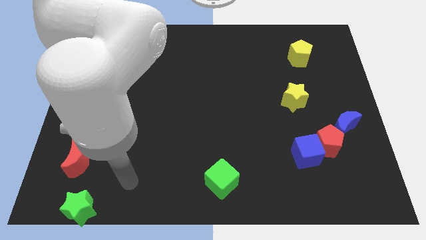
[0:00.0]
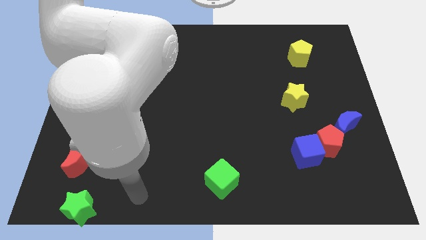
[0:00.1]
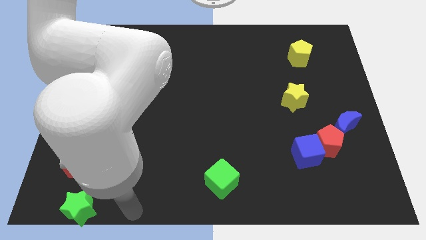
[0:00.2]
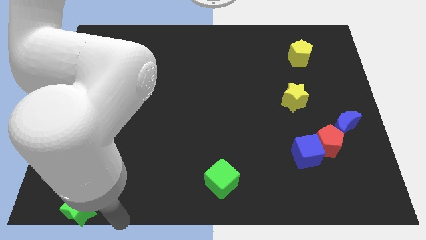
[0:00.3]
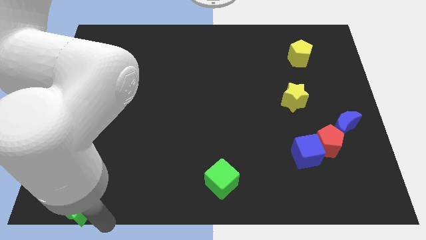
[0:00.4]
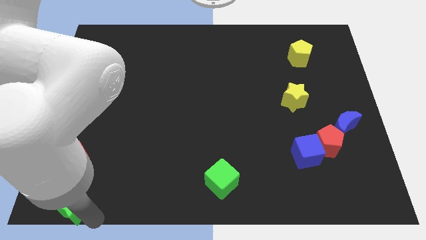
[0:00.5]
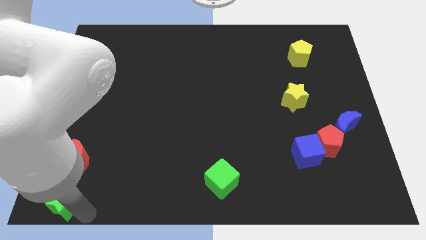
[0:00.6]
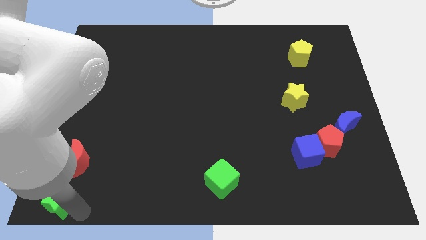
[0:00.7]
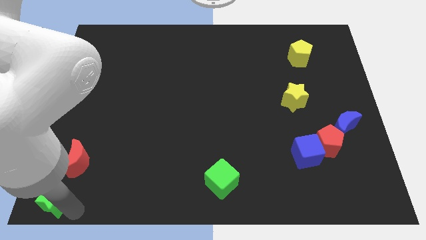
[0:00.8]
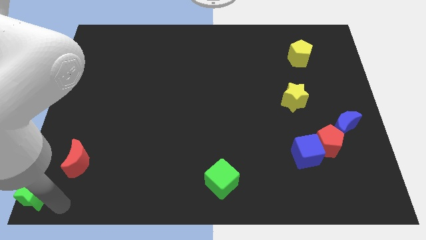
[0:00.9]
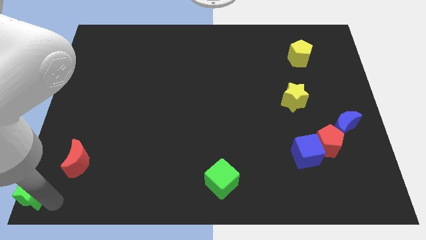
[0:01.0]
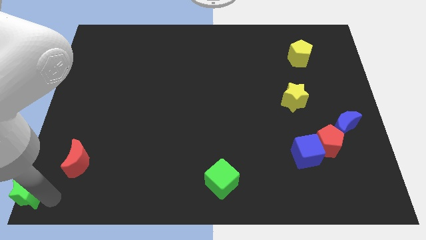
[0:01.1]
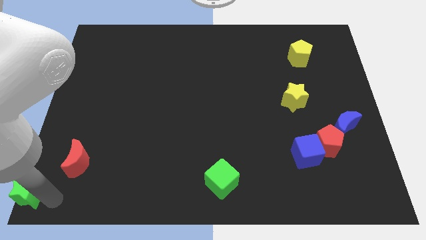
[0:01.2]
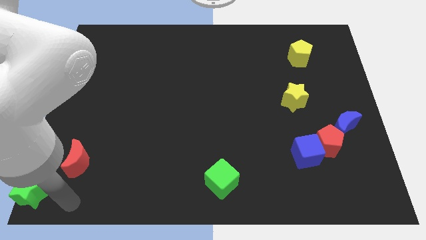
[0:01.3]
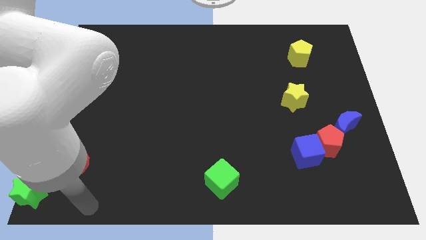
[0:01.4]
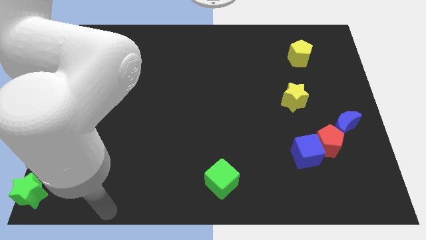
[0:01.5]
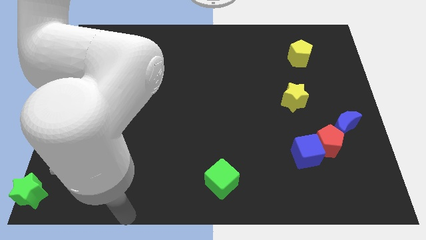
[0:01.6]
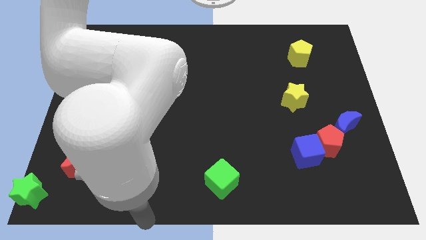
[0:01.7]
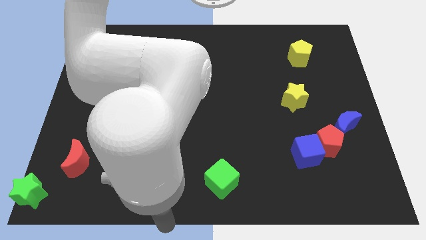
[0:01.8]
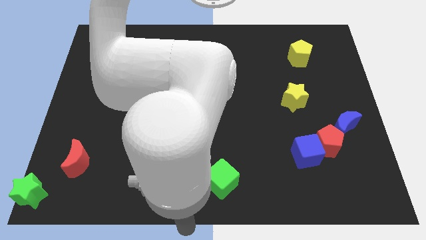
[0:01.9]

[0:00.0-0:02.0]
push the green star to the bottom left corner

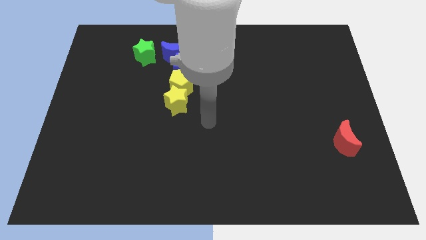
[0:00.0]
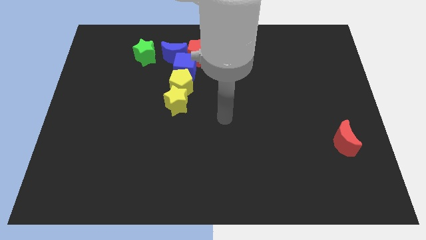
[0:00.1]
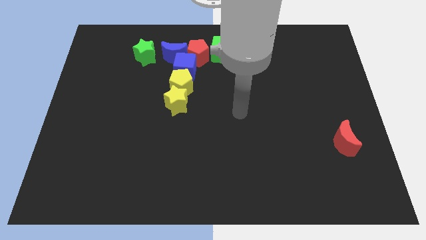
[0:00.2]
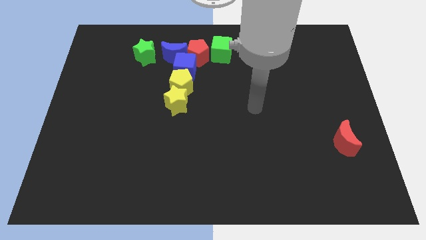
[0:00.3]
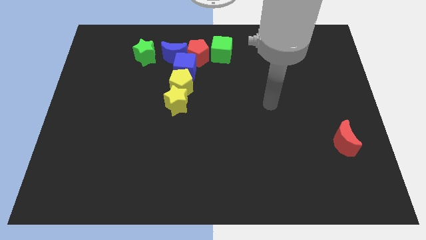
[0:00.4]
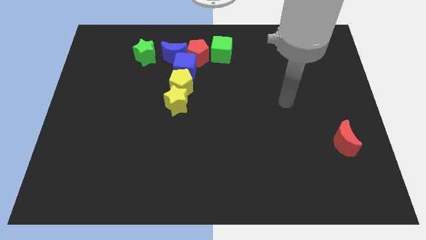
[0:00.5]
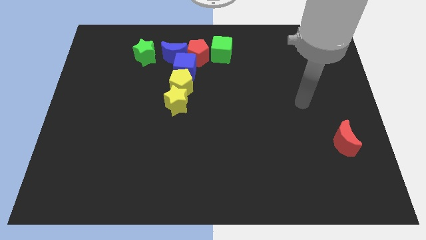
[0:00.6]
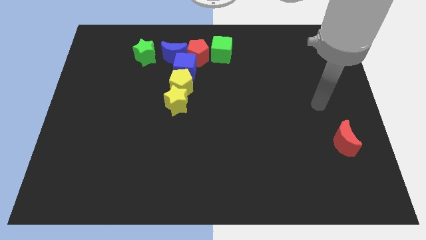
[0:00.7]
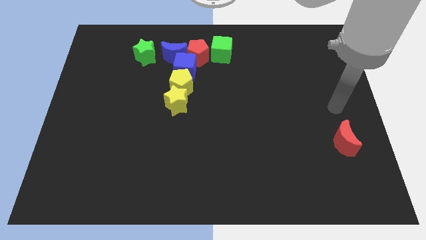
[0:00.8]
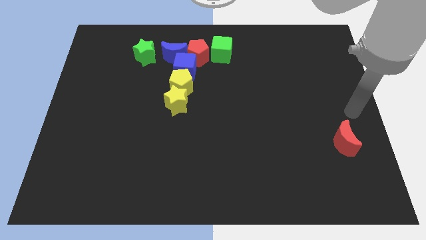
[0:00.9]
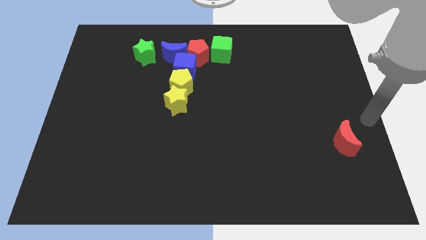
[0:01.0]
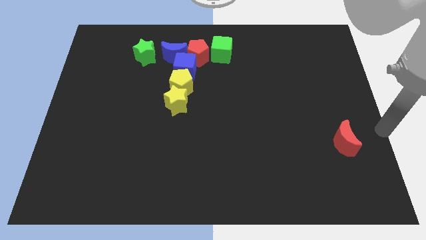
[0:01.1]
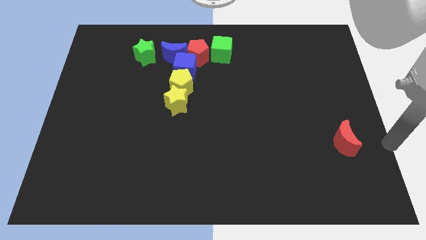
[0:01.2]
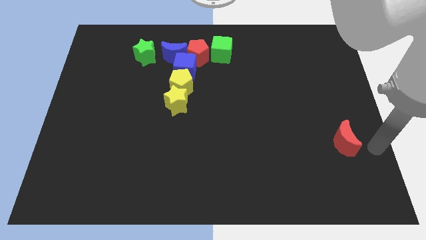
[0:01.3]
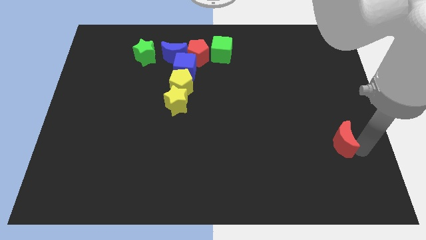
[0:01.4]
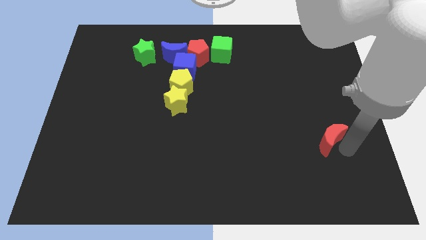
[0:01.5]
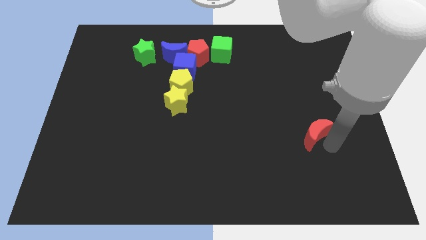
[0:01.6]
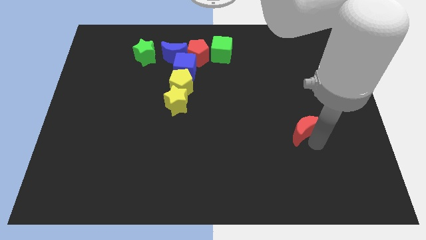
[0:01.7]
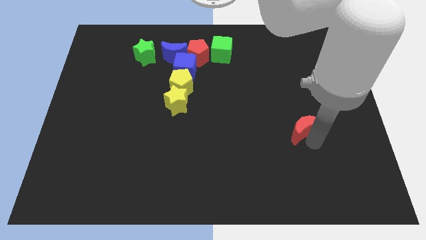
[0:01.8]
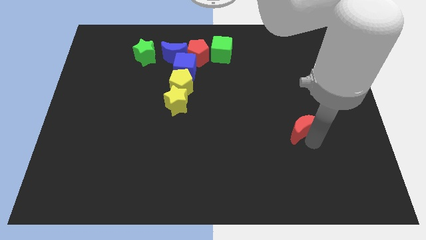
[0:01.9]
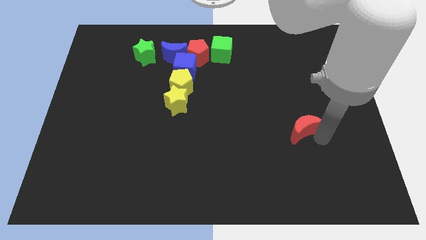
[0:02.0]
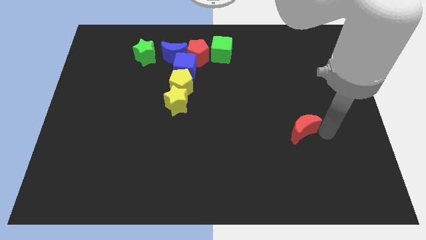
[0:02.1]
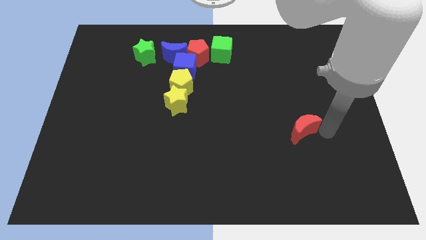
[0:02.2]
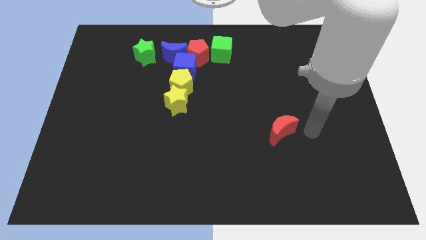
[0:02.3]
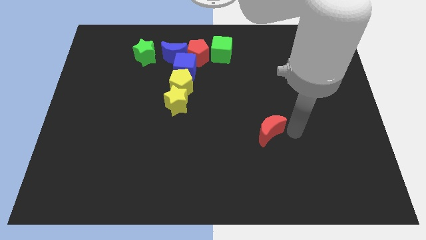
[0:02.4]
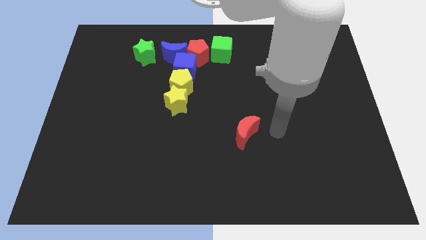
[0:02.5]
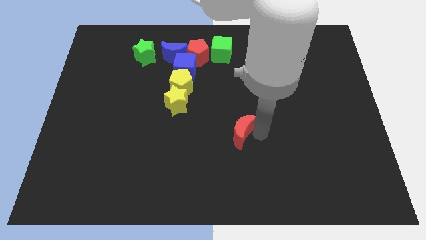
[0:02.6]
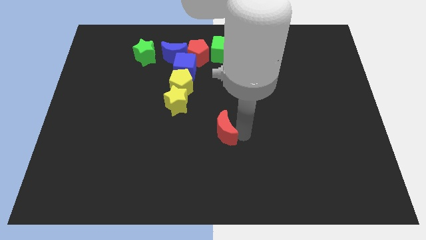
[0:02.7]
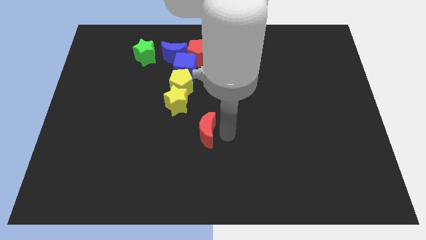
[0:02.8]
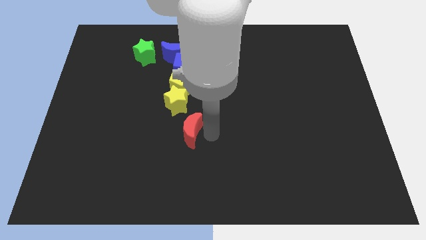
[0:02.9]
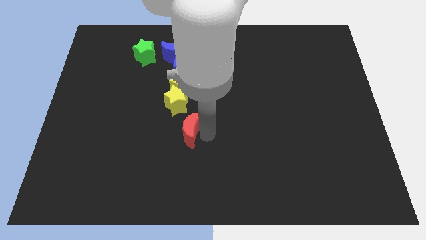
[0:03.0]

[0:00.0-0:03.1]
move the red crescent below to the yellow star

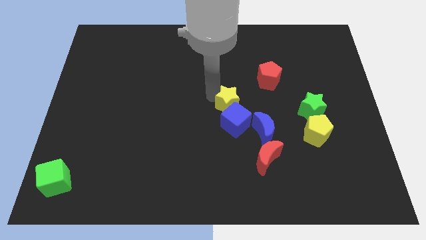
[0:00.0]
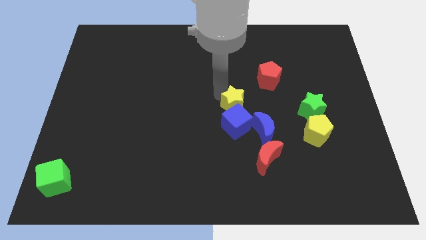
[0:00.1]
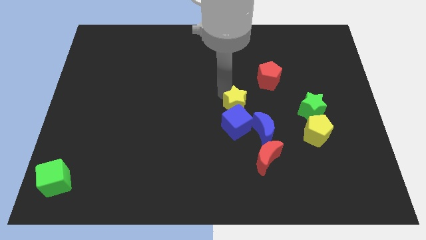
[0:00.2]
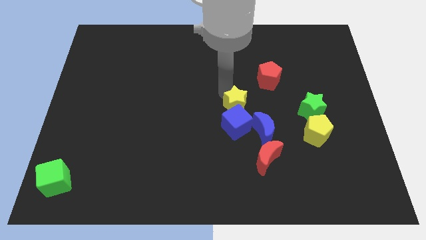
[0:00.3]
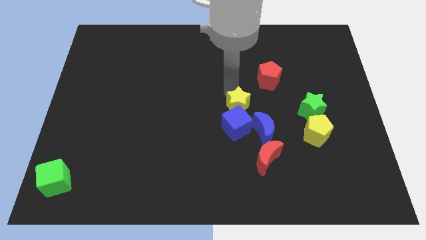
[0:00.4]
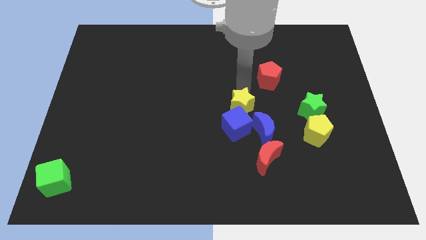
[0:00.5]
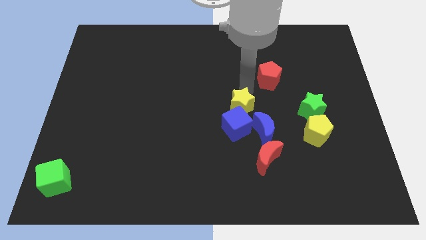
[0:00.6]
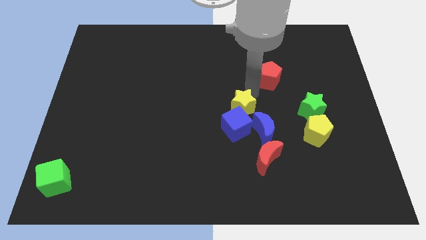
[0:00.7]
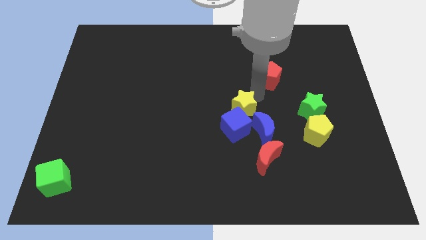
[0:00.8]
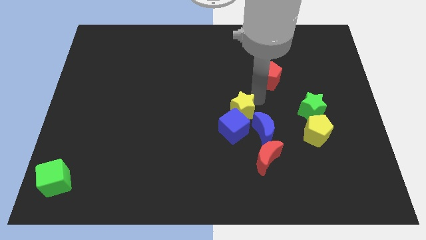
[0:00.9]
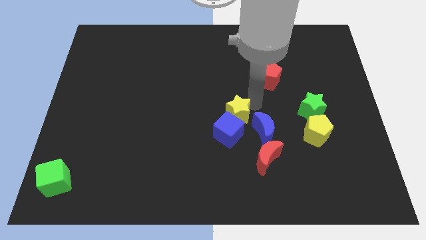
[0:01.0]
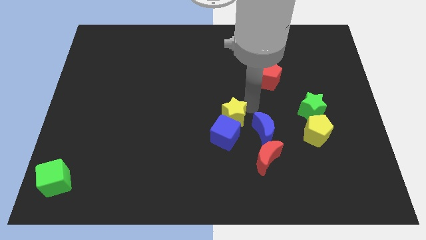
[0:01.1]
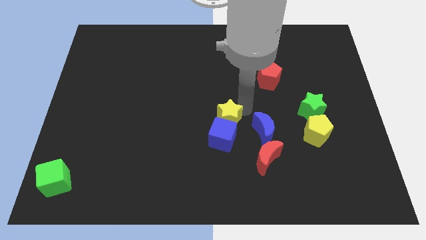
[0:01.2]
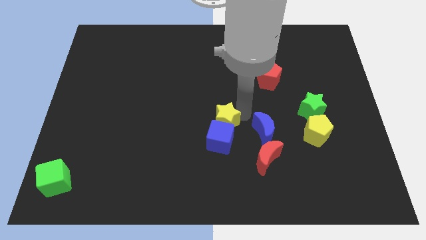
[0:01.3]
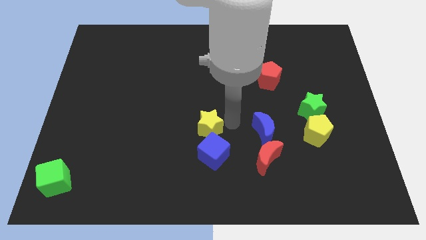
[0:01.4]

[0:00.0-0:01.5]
place yellow star to the left of blue moon

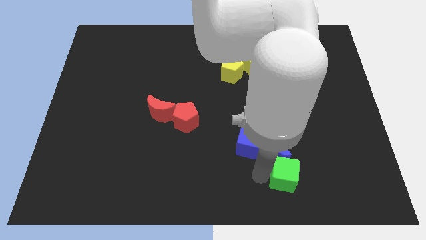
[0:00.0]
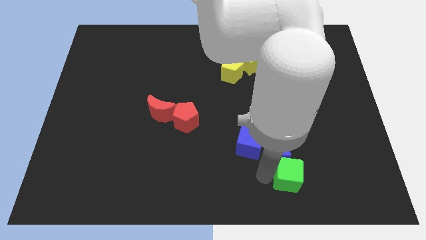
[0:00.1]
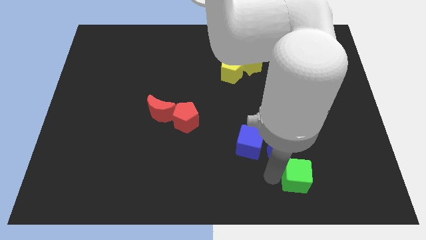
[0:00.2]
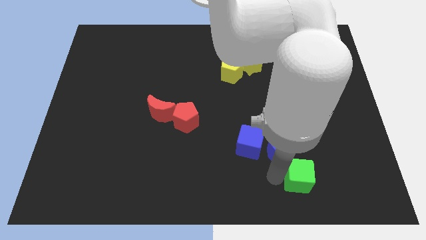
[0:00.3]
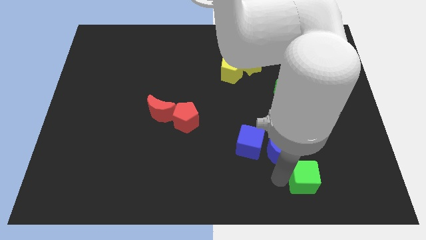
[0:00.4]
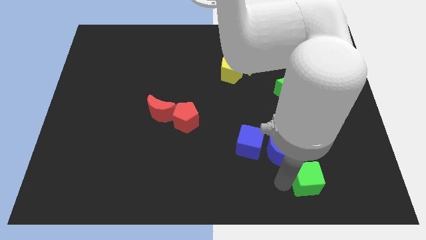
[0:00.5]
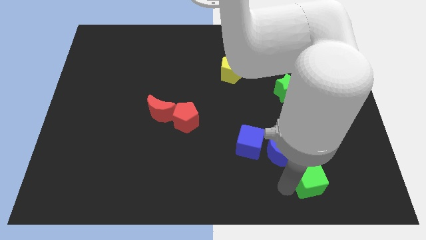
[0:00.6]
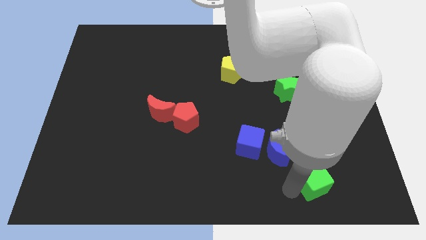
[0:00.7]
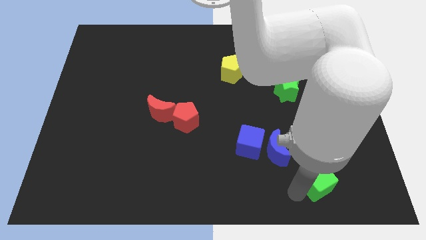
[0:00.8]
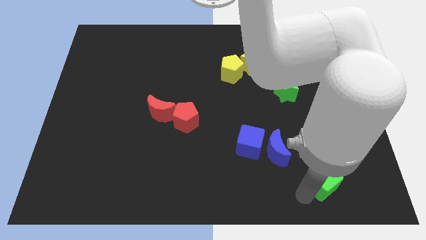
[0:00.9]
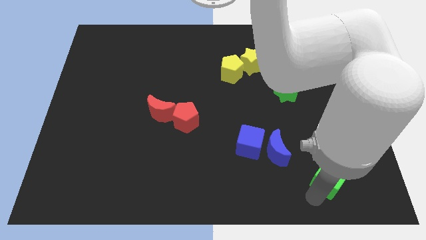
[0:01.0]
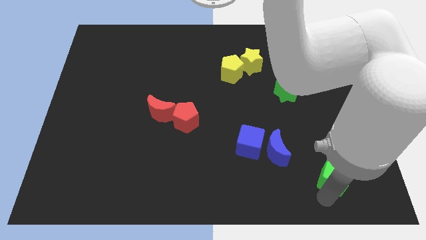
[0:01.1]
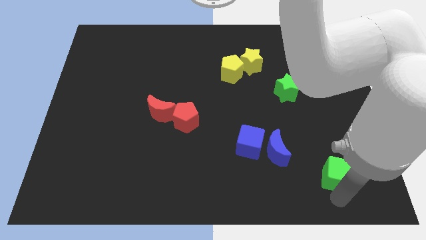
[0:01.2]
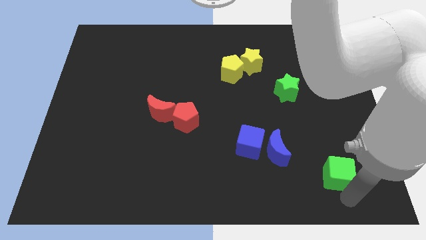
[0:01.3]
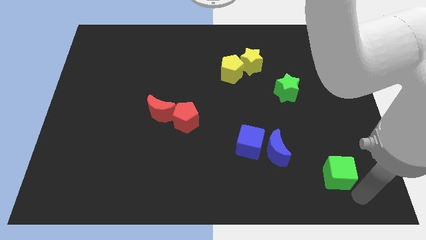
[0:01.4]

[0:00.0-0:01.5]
move the green cube towards the right of the board

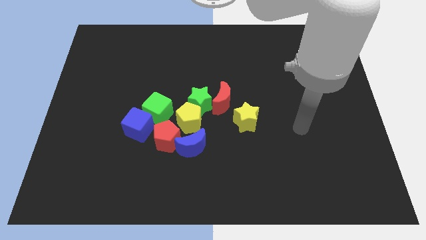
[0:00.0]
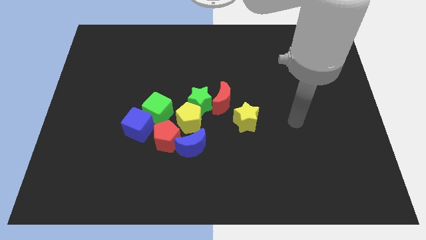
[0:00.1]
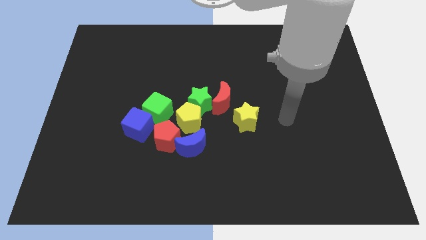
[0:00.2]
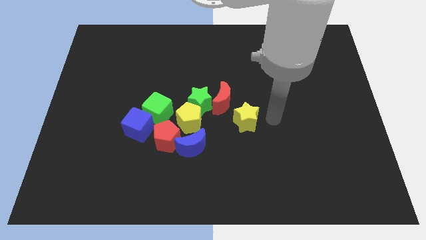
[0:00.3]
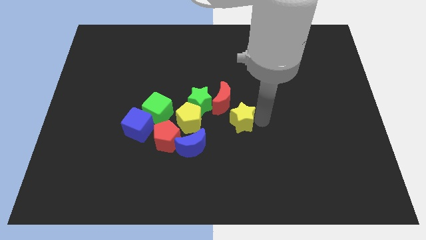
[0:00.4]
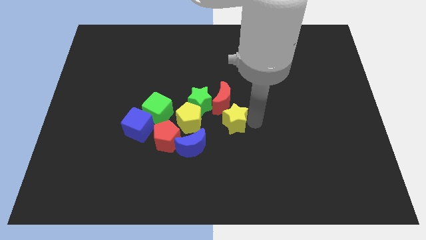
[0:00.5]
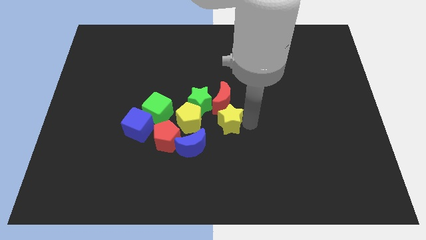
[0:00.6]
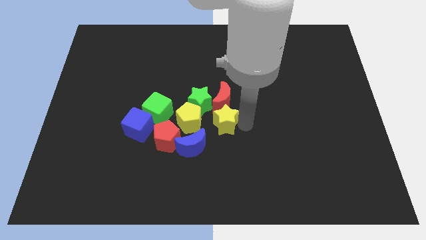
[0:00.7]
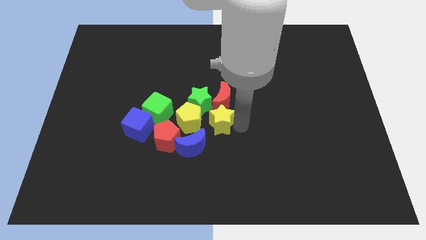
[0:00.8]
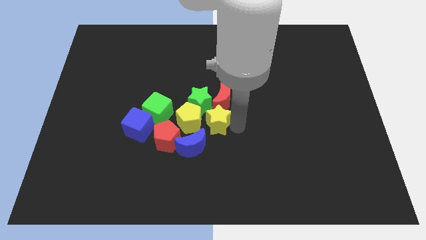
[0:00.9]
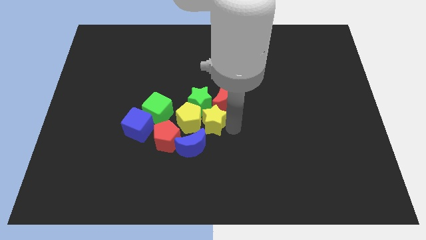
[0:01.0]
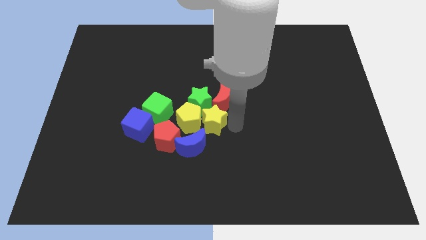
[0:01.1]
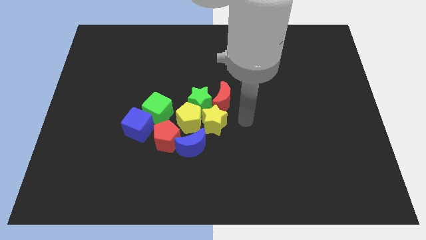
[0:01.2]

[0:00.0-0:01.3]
slide the yellow star close to the right side of the yellow pentagon
